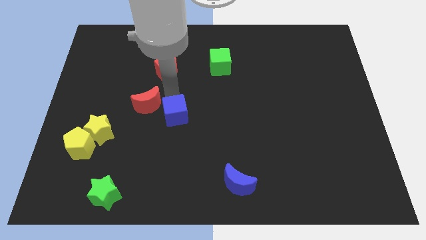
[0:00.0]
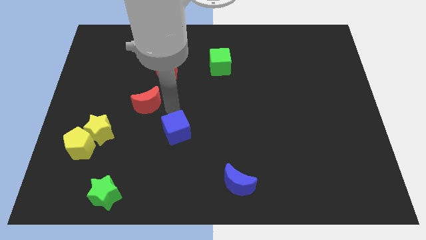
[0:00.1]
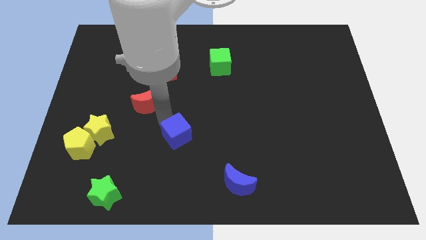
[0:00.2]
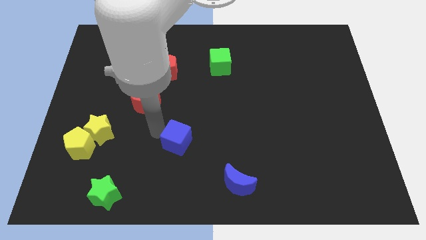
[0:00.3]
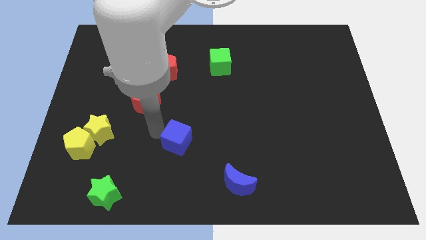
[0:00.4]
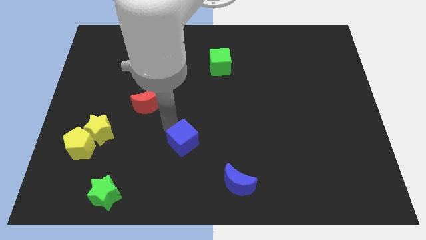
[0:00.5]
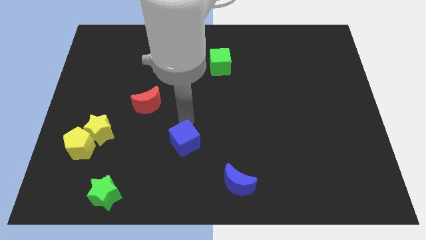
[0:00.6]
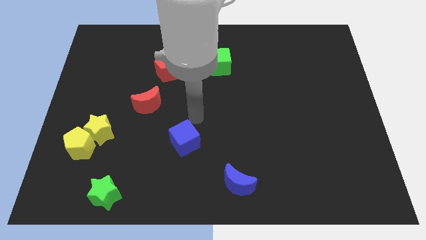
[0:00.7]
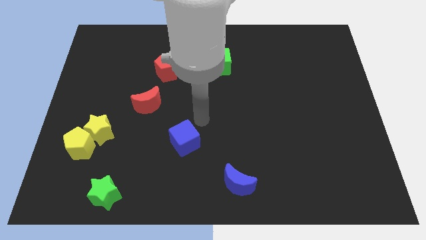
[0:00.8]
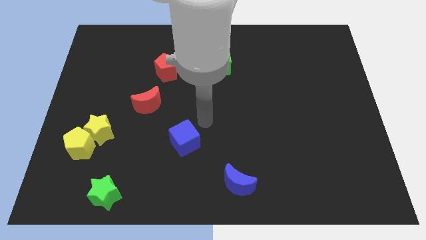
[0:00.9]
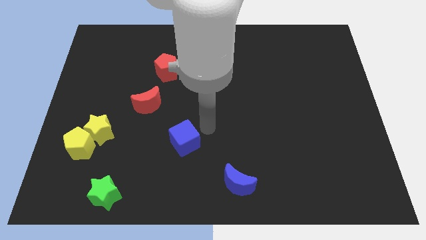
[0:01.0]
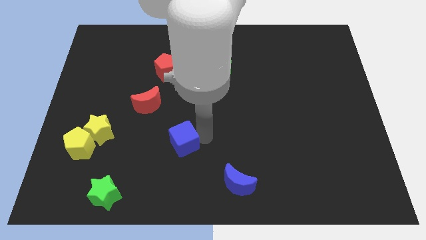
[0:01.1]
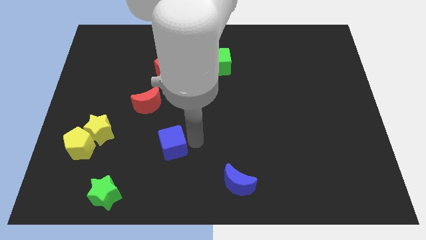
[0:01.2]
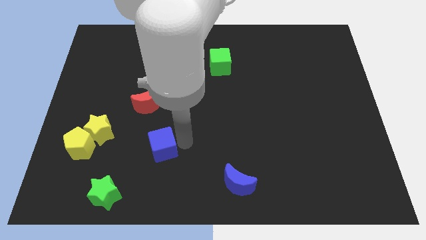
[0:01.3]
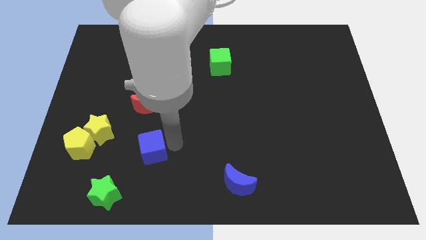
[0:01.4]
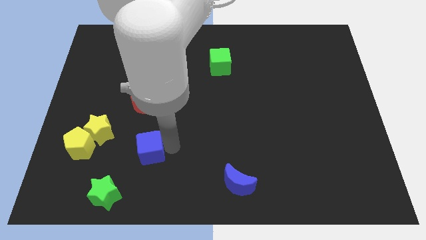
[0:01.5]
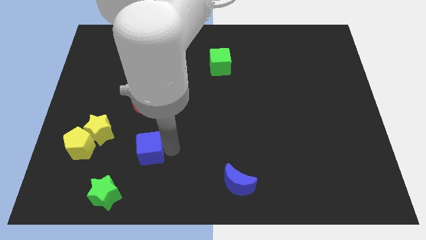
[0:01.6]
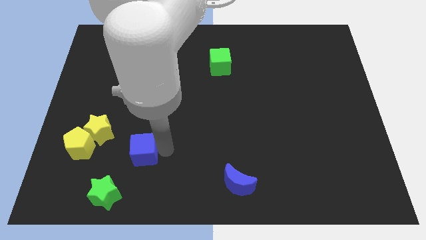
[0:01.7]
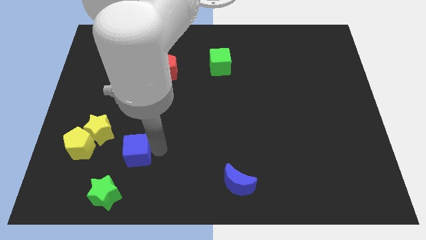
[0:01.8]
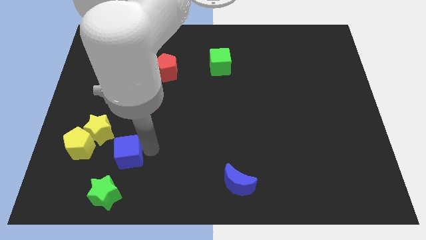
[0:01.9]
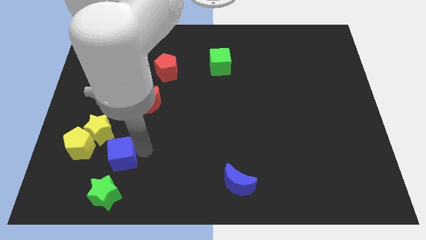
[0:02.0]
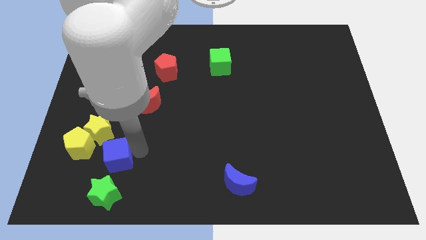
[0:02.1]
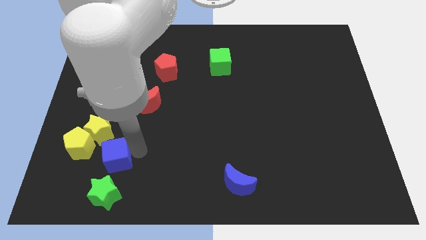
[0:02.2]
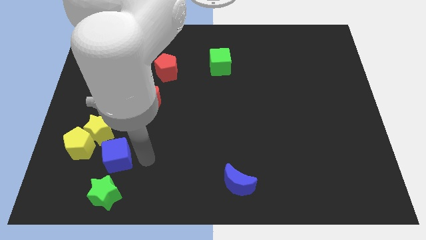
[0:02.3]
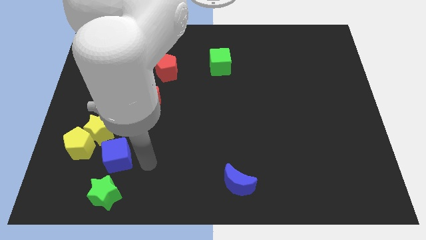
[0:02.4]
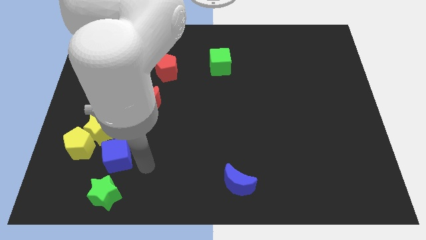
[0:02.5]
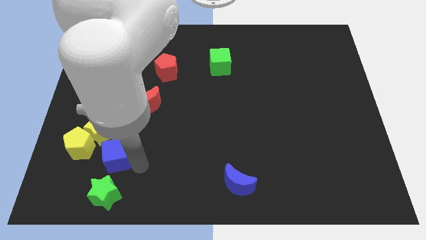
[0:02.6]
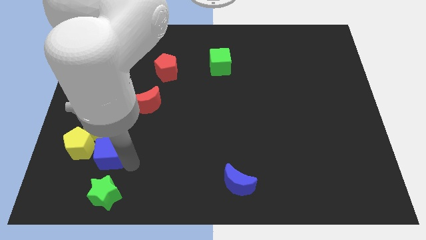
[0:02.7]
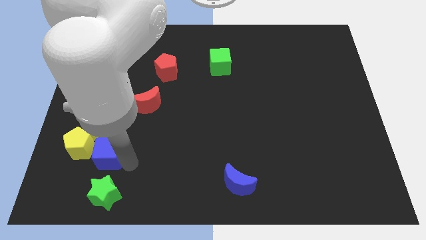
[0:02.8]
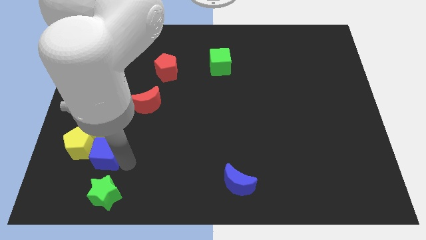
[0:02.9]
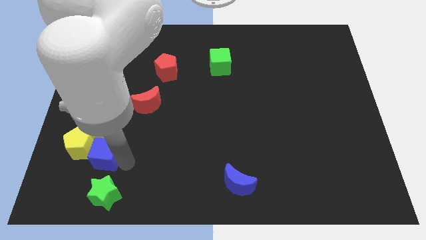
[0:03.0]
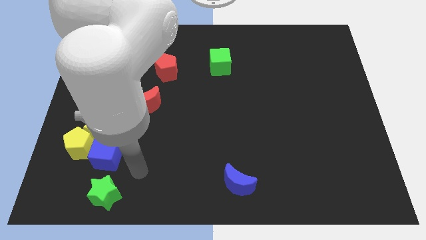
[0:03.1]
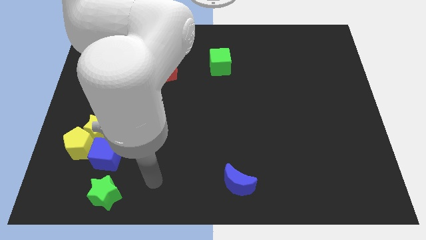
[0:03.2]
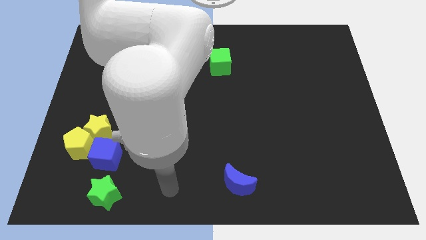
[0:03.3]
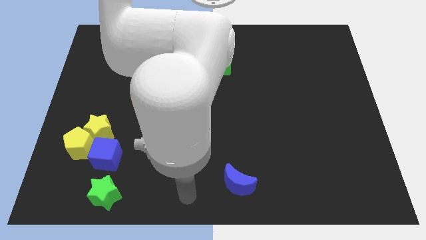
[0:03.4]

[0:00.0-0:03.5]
move blue cube to the right of yellow pentagon

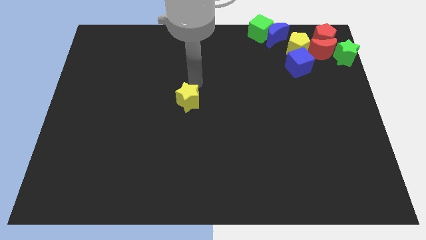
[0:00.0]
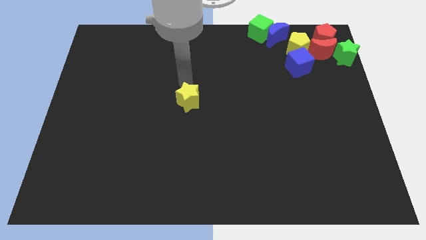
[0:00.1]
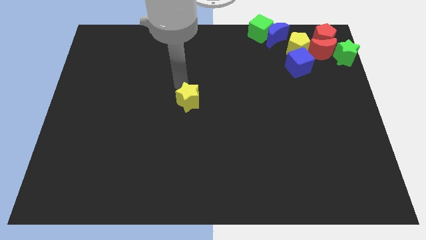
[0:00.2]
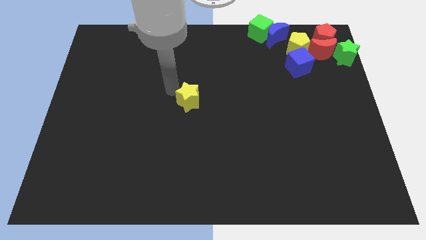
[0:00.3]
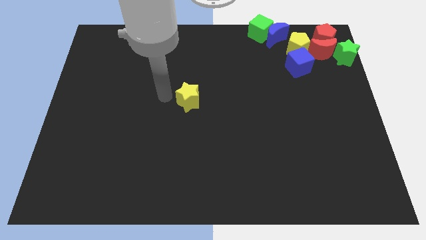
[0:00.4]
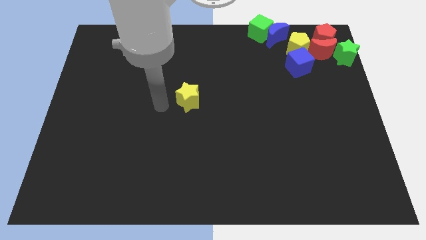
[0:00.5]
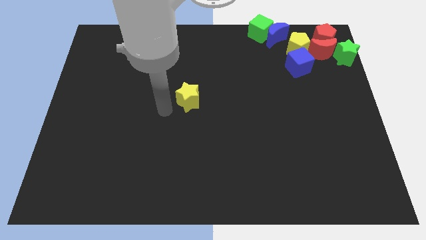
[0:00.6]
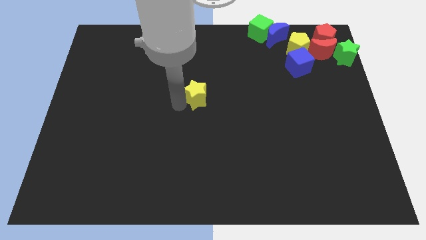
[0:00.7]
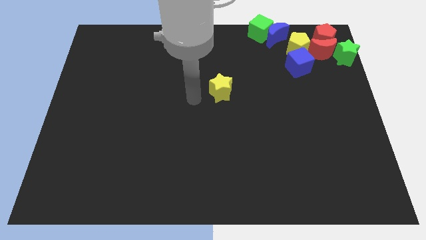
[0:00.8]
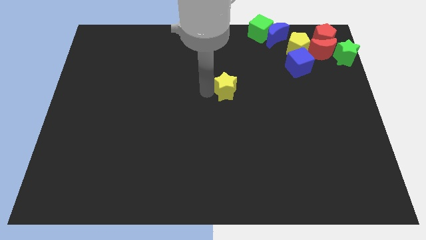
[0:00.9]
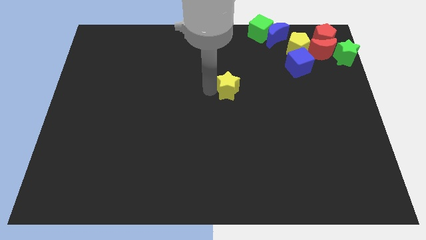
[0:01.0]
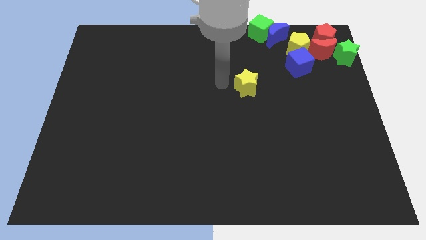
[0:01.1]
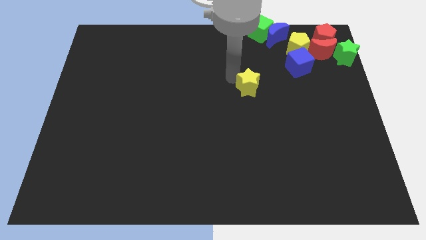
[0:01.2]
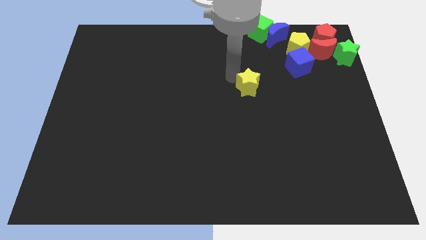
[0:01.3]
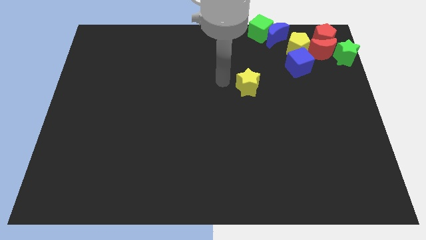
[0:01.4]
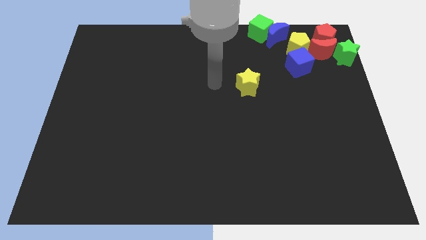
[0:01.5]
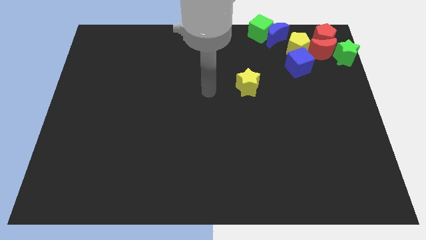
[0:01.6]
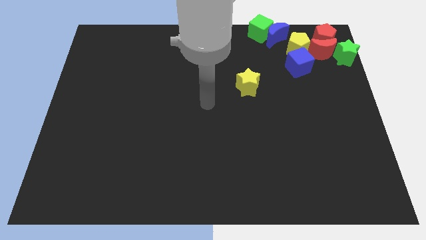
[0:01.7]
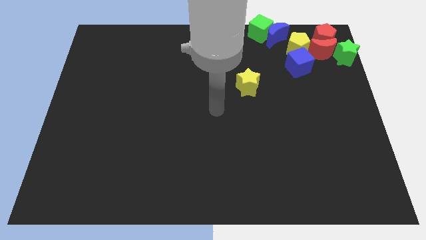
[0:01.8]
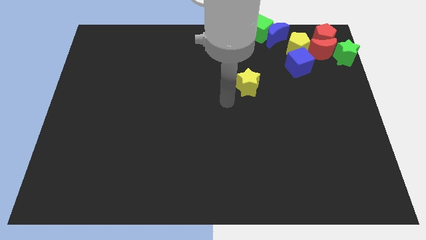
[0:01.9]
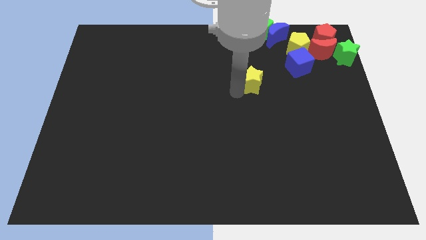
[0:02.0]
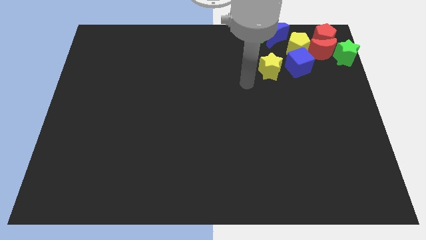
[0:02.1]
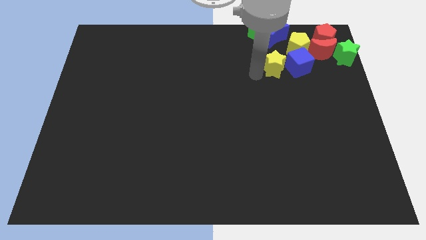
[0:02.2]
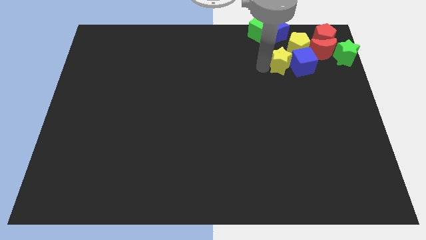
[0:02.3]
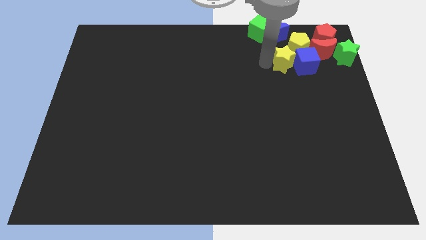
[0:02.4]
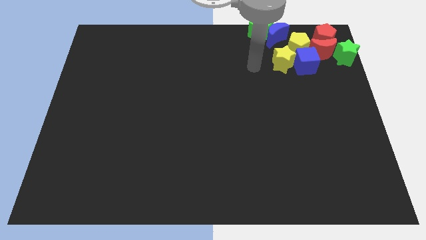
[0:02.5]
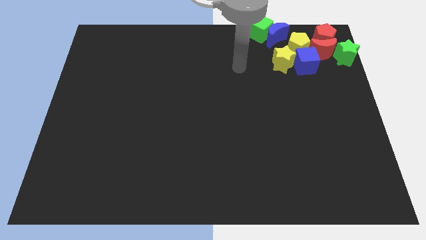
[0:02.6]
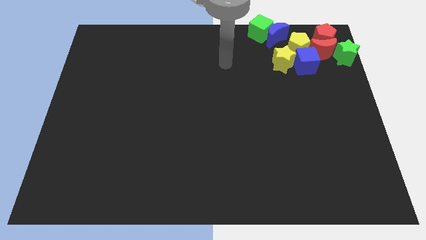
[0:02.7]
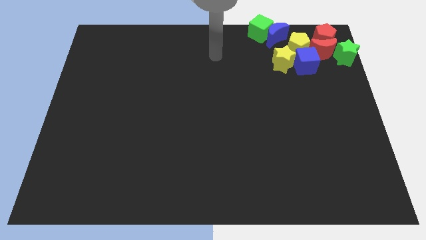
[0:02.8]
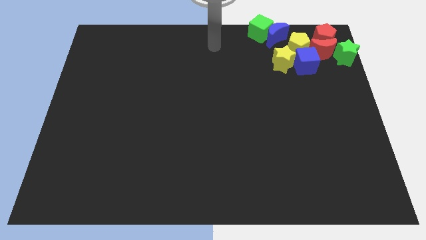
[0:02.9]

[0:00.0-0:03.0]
place the yellow star to the left of blue cube

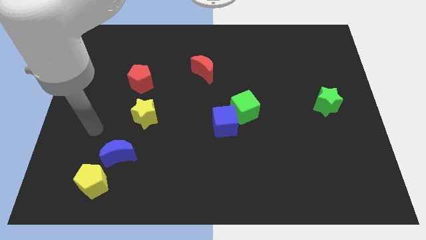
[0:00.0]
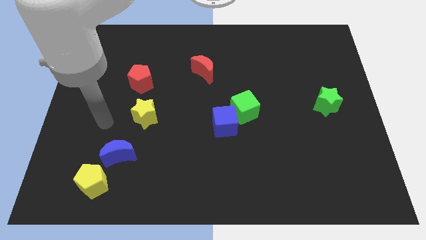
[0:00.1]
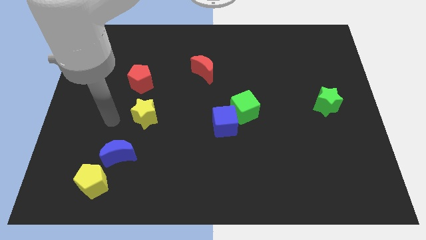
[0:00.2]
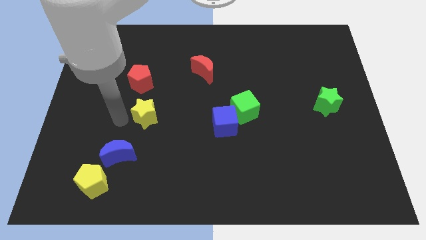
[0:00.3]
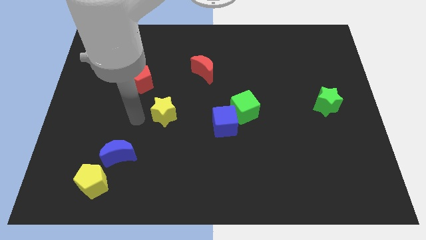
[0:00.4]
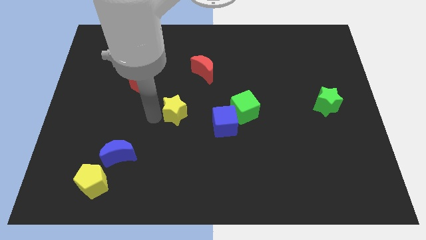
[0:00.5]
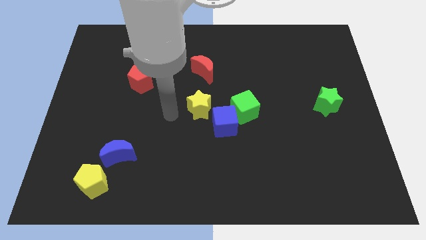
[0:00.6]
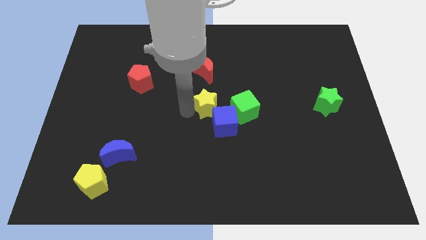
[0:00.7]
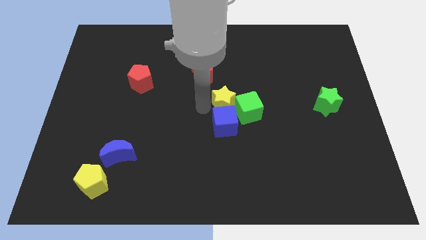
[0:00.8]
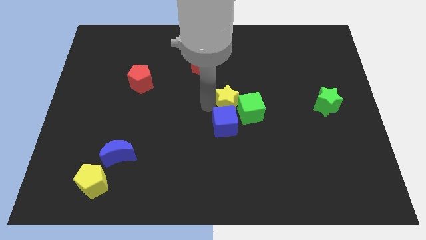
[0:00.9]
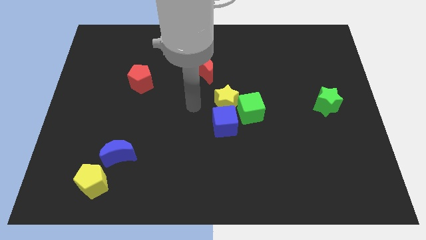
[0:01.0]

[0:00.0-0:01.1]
push the yellow star to the top of the blue cube

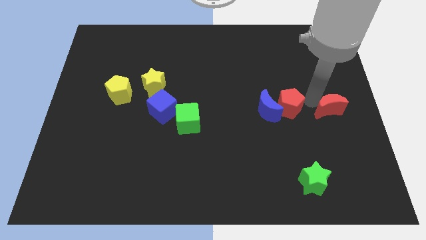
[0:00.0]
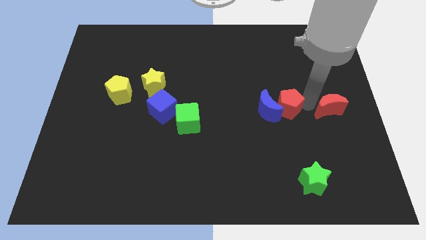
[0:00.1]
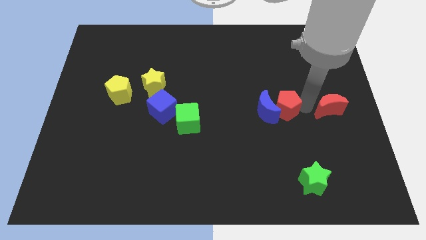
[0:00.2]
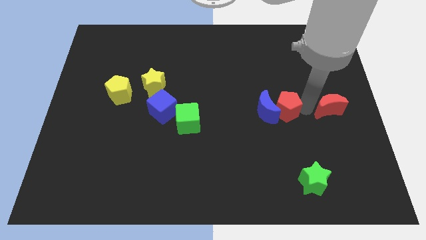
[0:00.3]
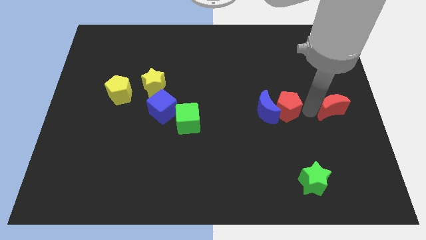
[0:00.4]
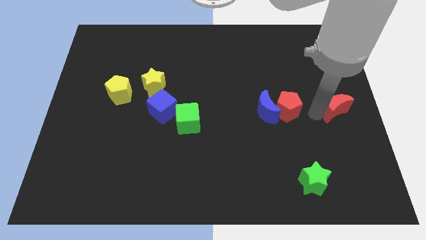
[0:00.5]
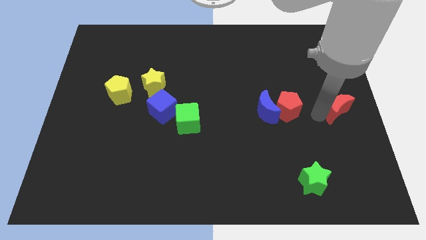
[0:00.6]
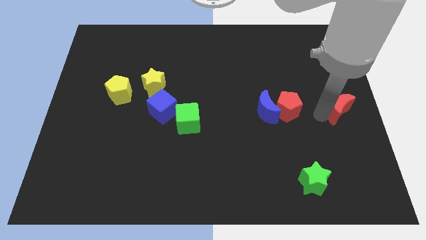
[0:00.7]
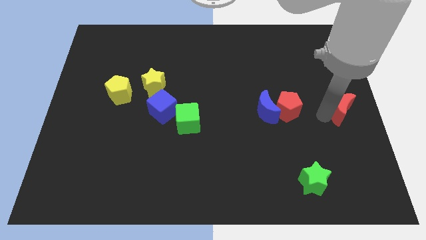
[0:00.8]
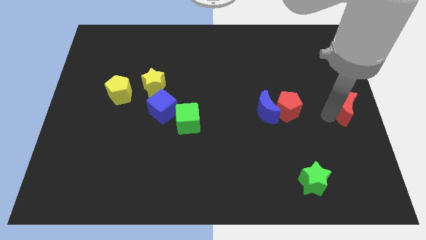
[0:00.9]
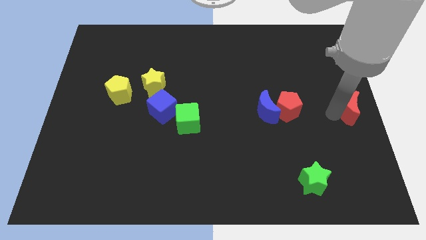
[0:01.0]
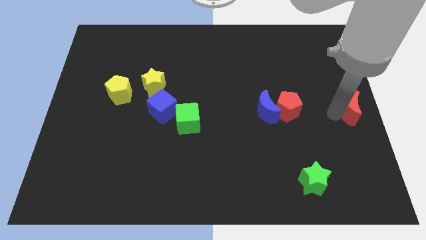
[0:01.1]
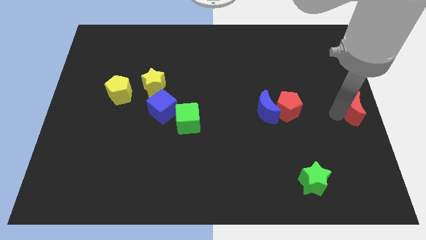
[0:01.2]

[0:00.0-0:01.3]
move red crescent to the right
